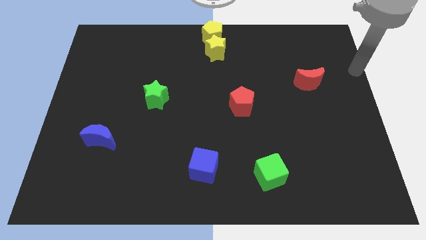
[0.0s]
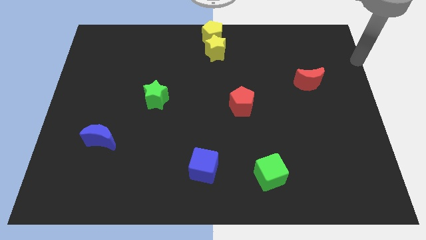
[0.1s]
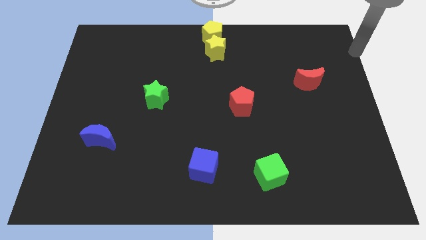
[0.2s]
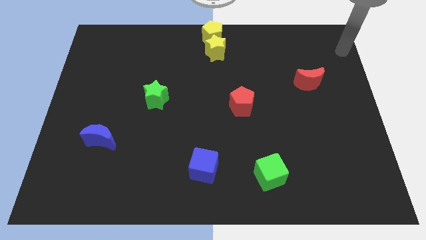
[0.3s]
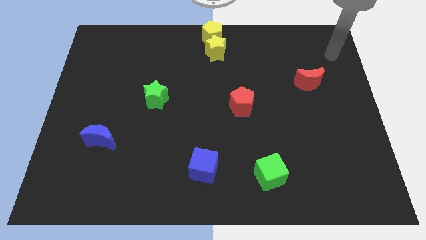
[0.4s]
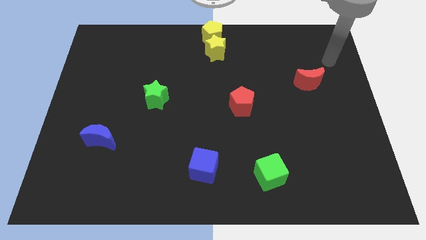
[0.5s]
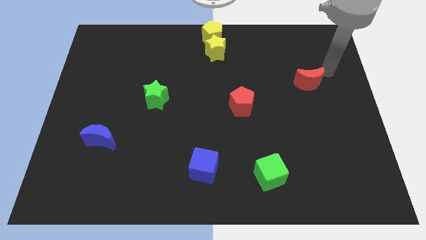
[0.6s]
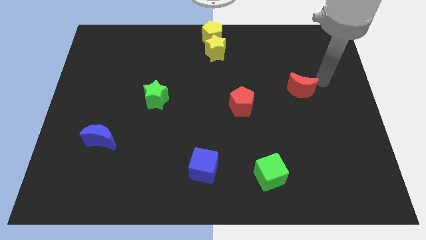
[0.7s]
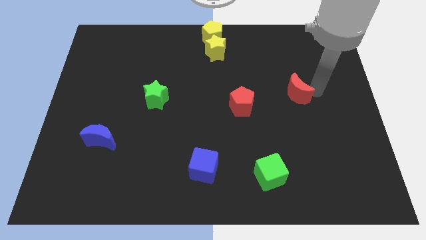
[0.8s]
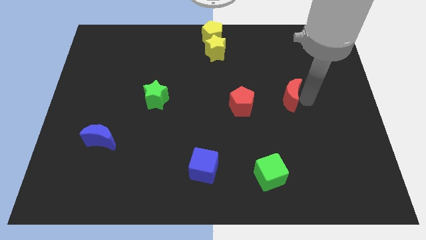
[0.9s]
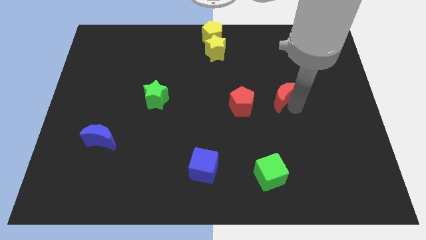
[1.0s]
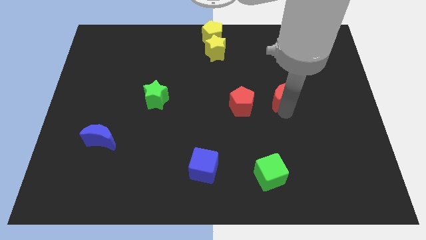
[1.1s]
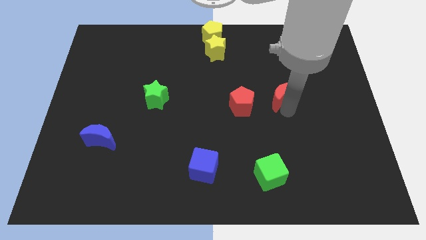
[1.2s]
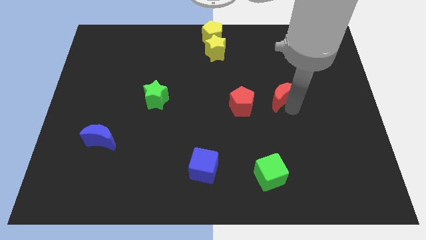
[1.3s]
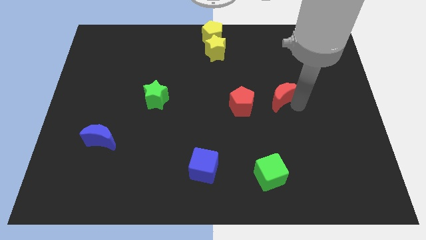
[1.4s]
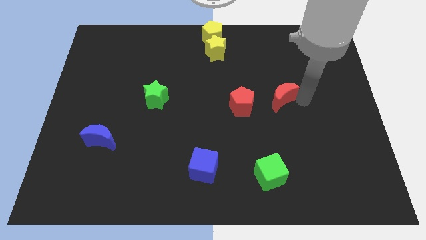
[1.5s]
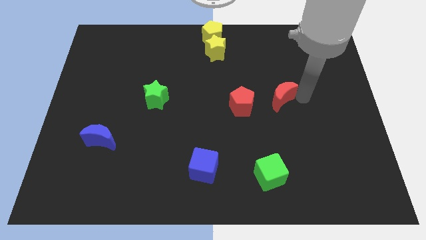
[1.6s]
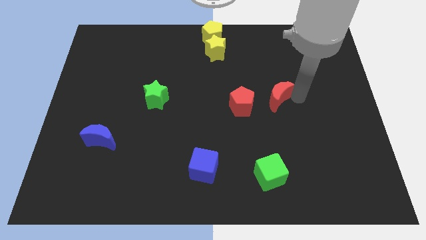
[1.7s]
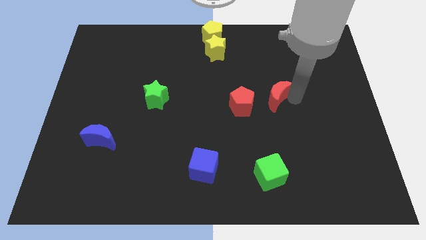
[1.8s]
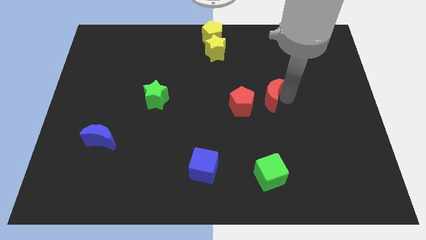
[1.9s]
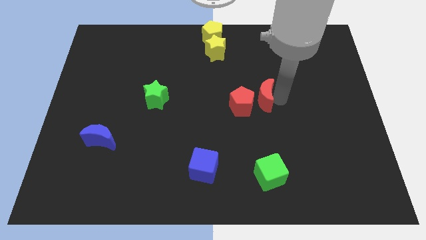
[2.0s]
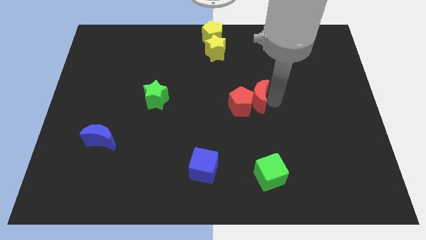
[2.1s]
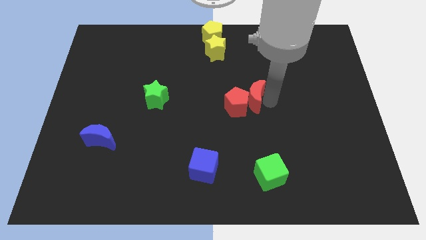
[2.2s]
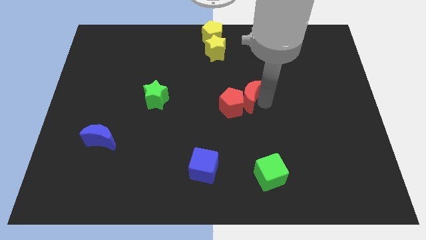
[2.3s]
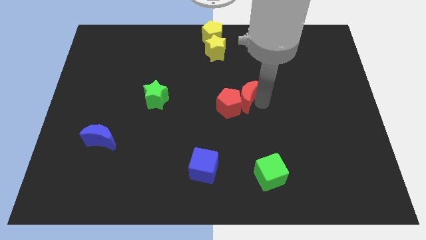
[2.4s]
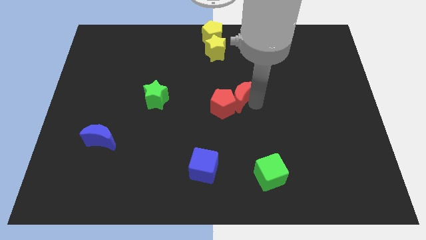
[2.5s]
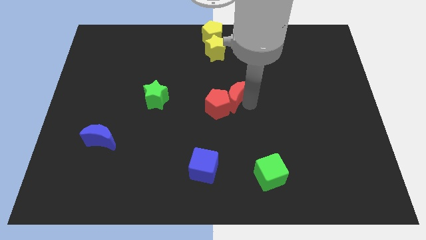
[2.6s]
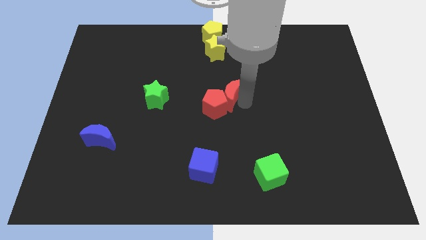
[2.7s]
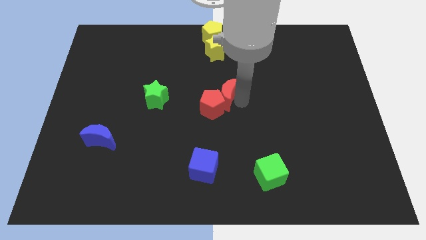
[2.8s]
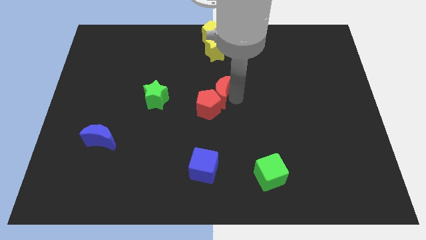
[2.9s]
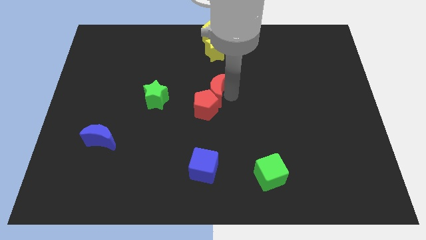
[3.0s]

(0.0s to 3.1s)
push the group of red blocks below the group of yellow blocks

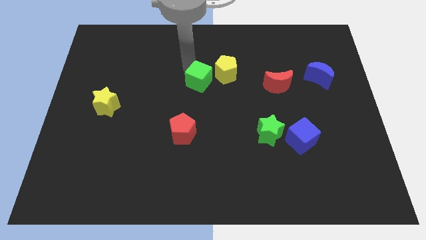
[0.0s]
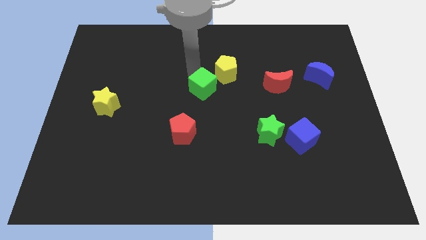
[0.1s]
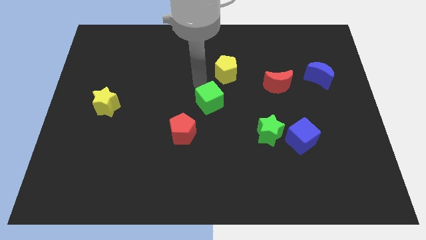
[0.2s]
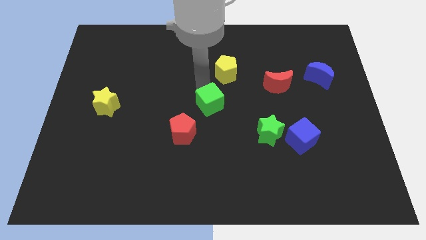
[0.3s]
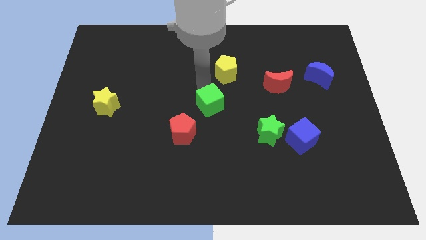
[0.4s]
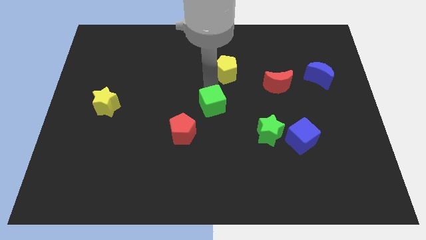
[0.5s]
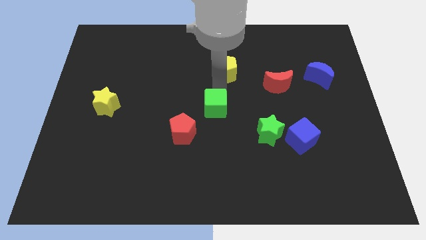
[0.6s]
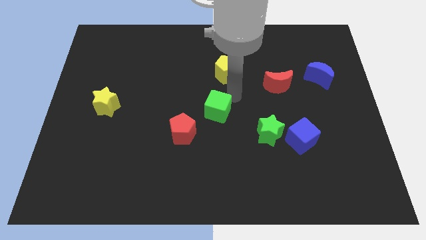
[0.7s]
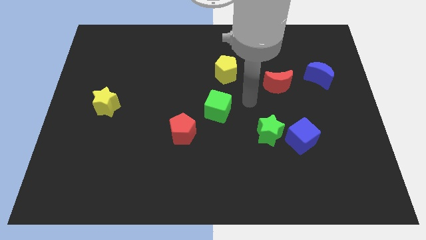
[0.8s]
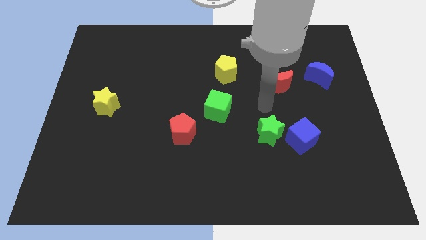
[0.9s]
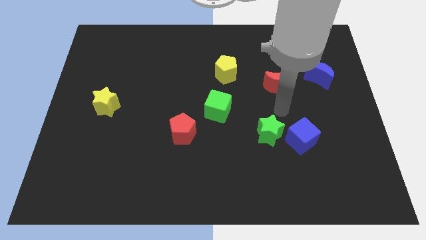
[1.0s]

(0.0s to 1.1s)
green cube to the bottom side of the yellow pentagon

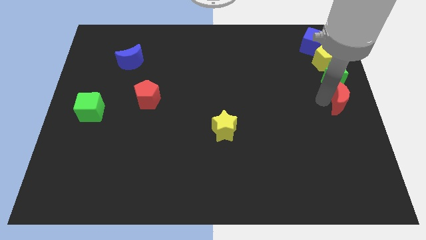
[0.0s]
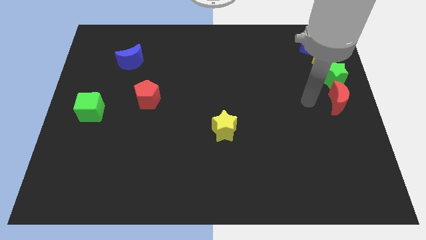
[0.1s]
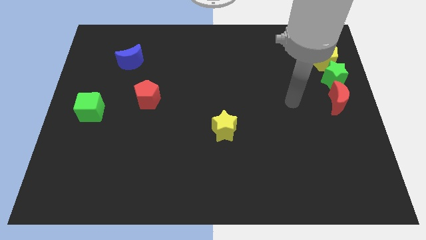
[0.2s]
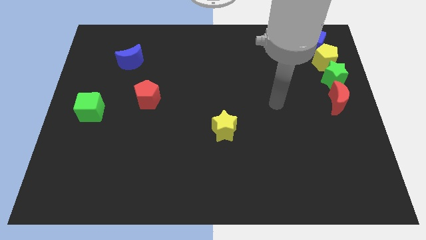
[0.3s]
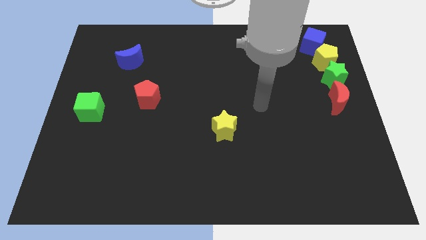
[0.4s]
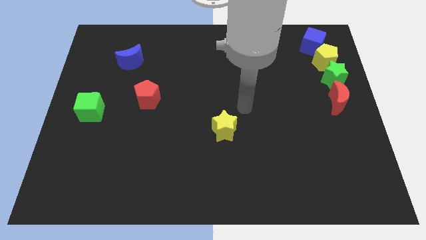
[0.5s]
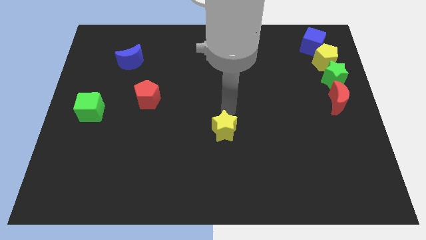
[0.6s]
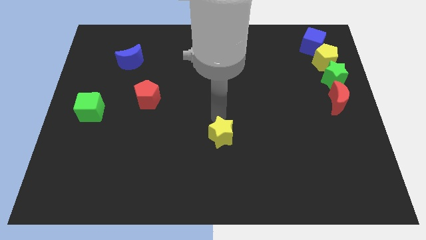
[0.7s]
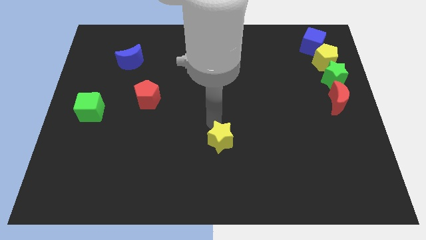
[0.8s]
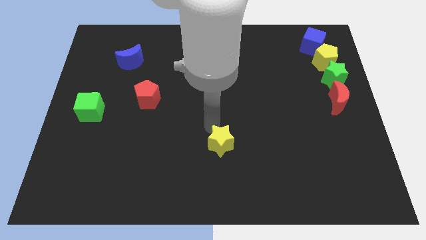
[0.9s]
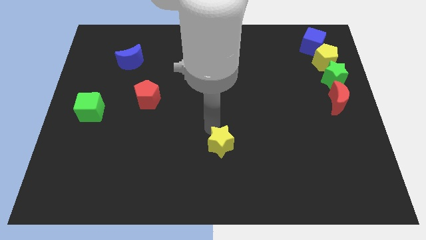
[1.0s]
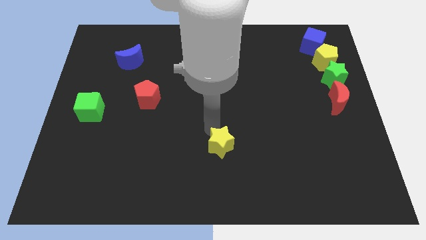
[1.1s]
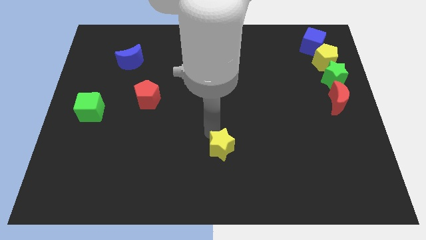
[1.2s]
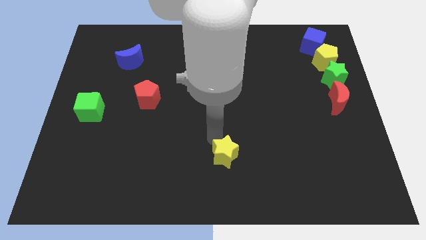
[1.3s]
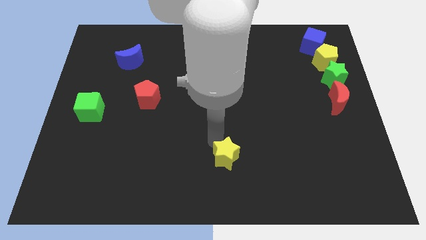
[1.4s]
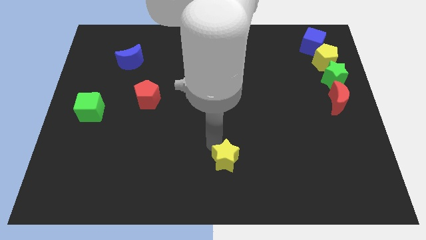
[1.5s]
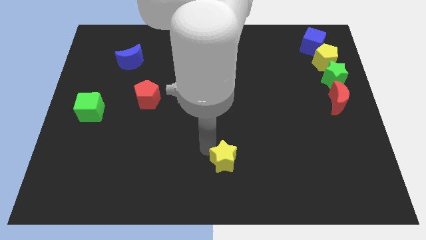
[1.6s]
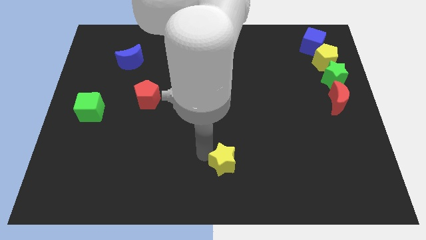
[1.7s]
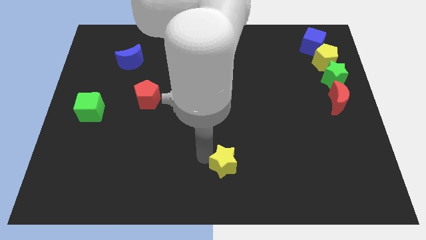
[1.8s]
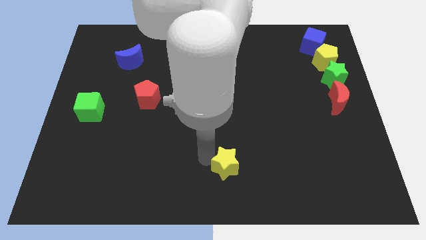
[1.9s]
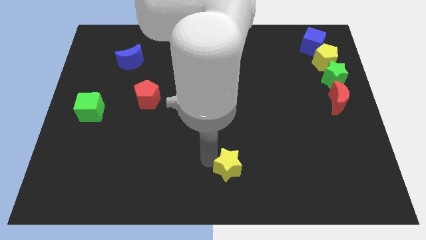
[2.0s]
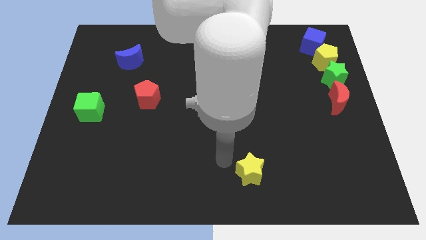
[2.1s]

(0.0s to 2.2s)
push yellow star slightly downwards

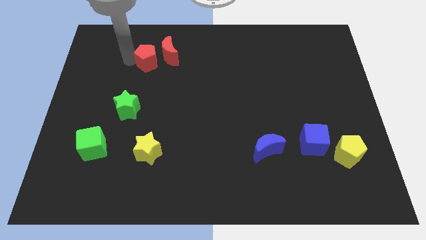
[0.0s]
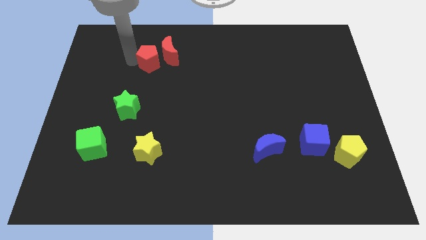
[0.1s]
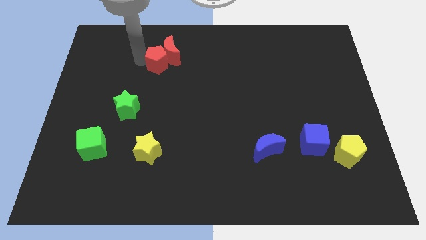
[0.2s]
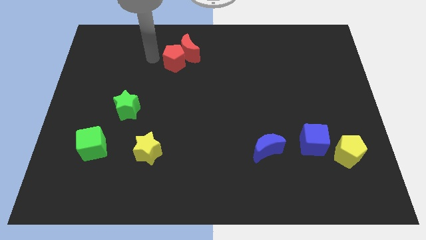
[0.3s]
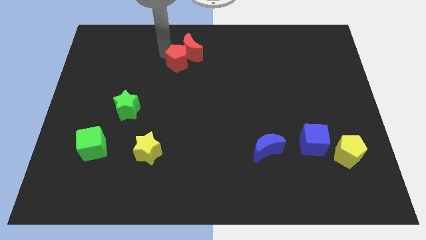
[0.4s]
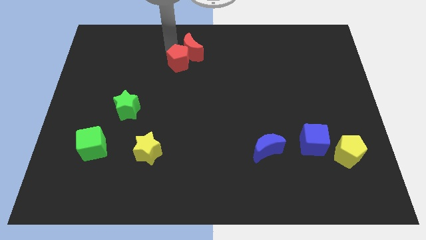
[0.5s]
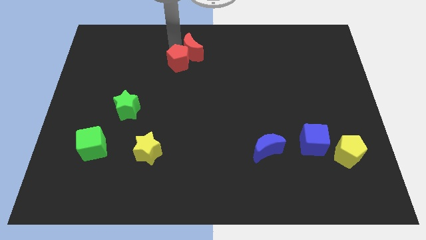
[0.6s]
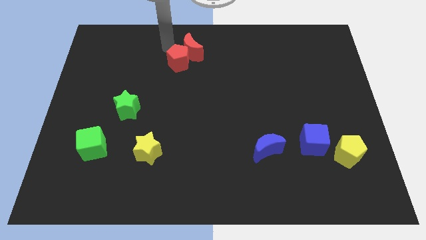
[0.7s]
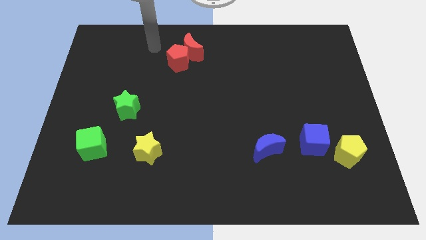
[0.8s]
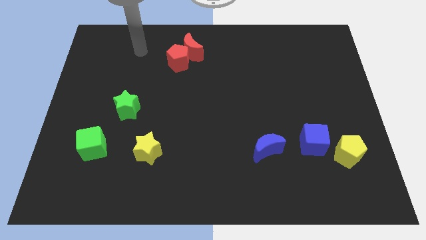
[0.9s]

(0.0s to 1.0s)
push red pentagon in to red moon

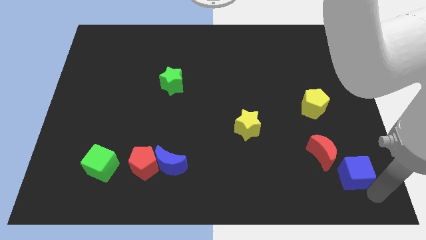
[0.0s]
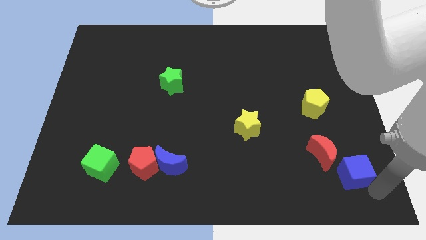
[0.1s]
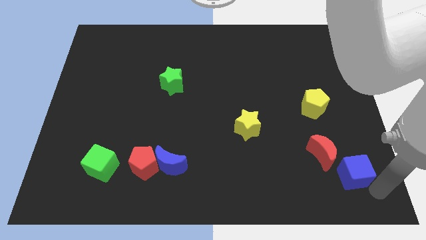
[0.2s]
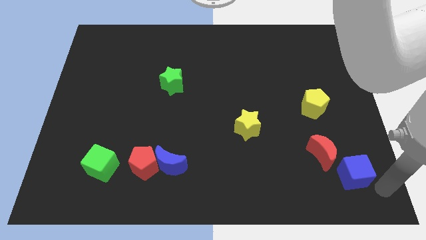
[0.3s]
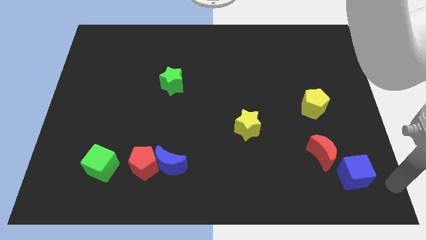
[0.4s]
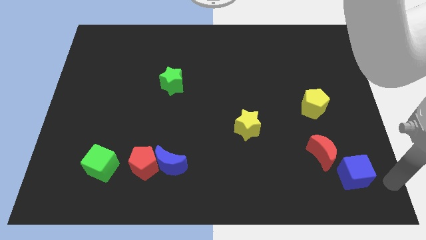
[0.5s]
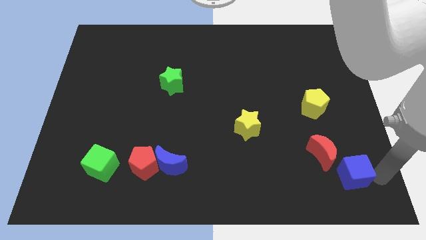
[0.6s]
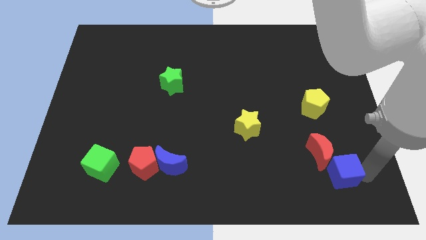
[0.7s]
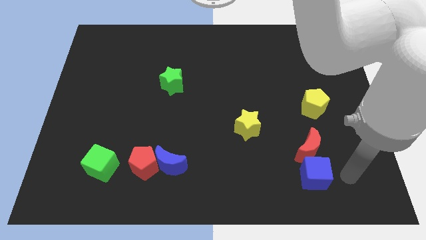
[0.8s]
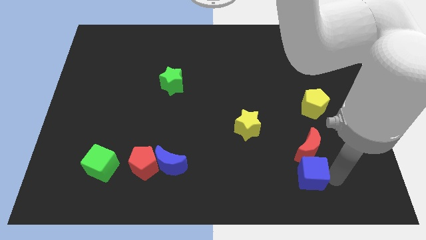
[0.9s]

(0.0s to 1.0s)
push blue cube below red crescent

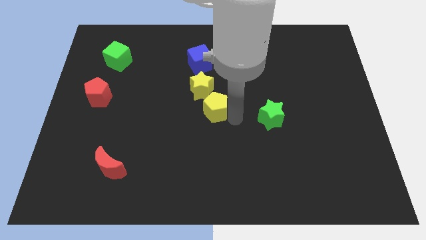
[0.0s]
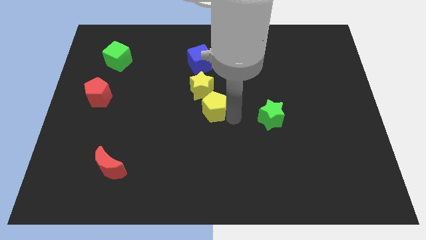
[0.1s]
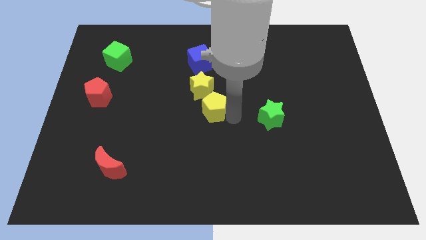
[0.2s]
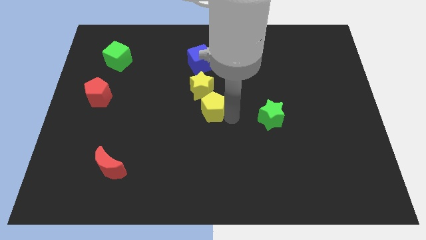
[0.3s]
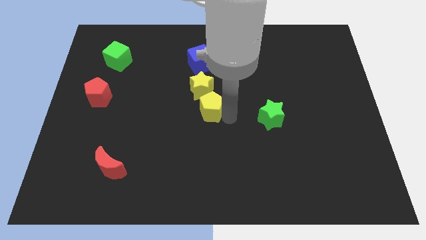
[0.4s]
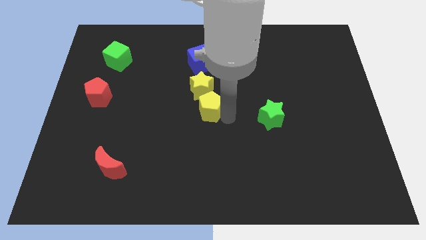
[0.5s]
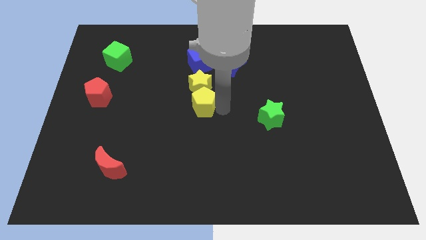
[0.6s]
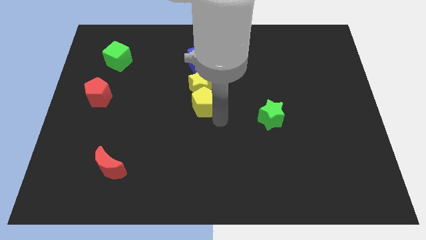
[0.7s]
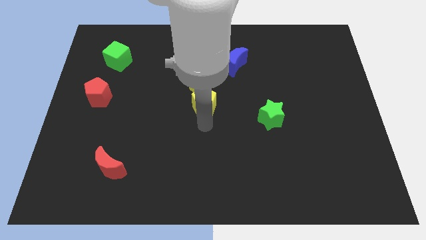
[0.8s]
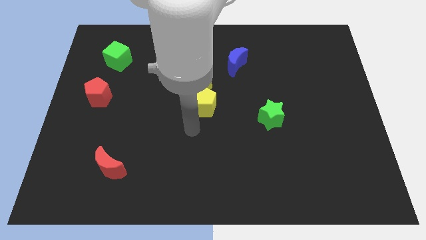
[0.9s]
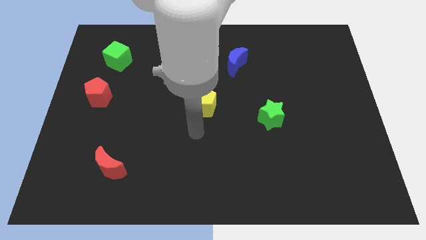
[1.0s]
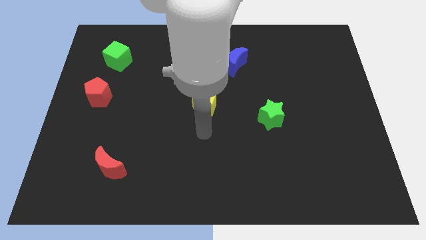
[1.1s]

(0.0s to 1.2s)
place the yellow pentagon below the yellow star
